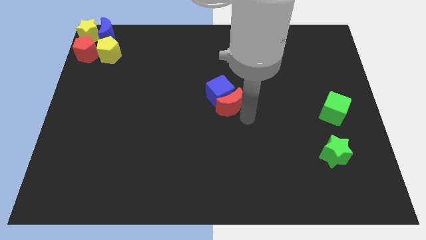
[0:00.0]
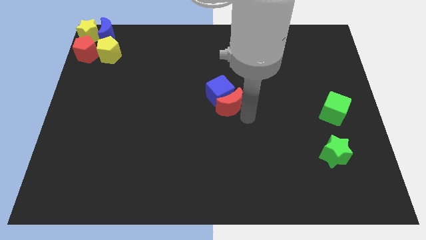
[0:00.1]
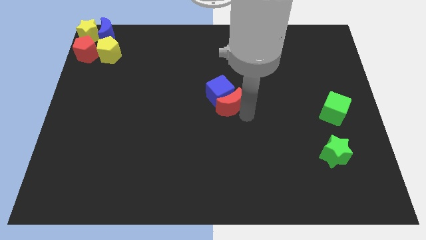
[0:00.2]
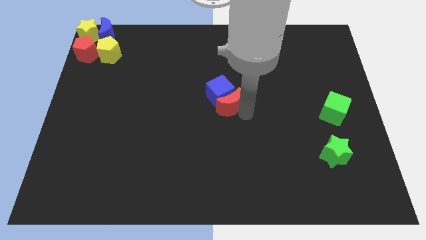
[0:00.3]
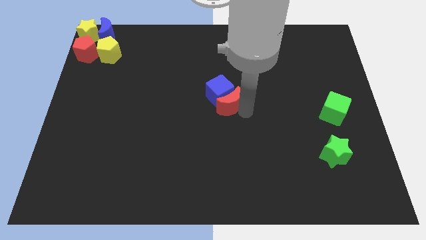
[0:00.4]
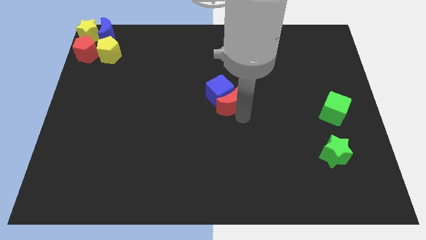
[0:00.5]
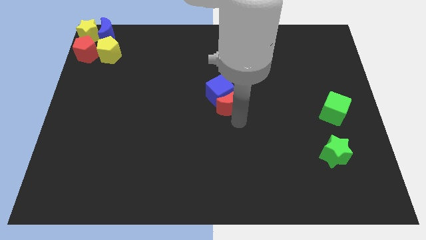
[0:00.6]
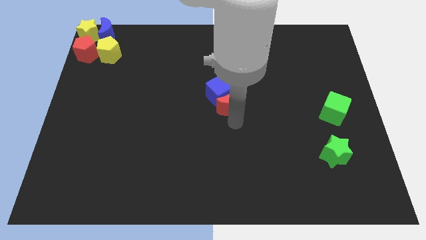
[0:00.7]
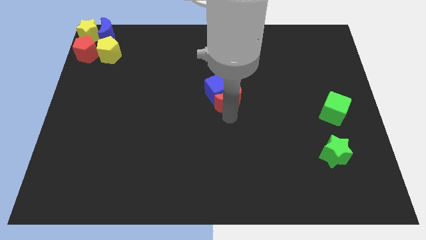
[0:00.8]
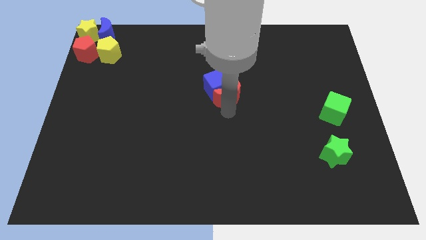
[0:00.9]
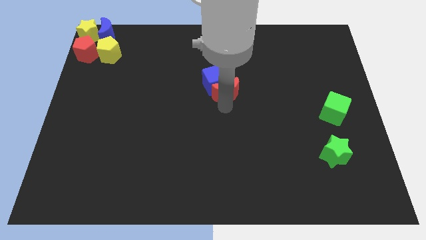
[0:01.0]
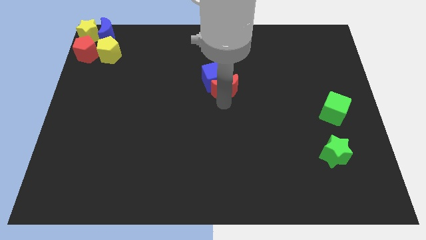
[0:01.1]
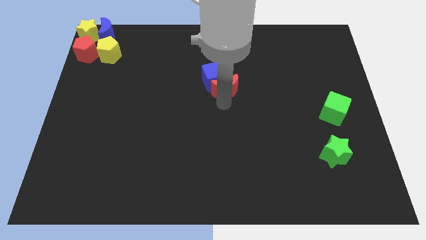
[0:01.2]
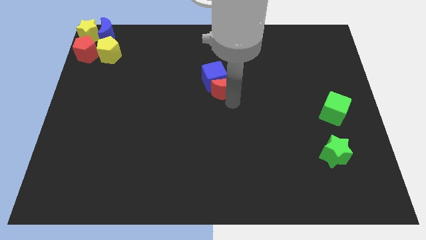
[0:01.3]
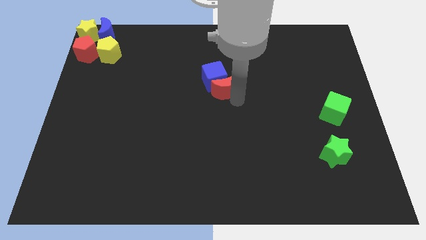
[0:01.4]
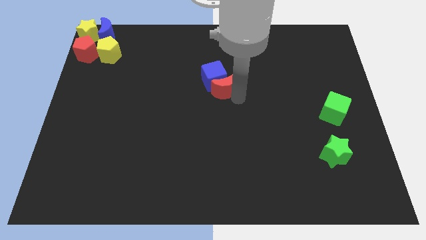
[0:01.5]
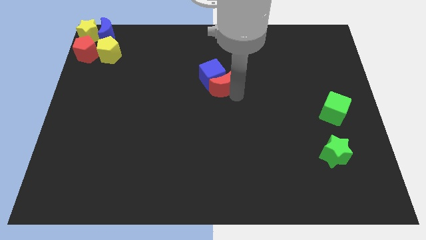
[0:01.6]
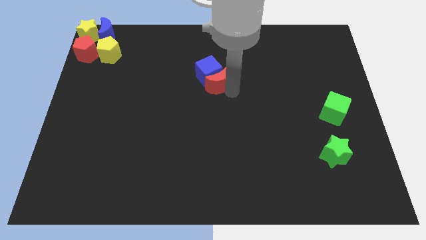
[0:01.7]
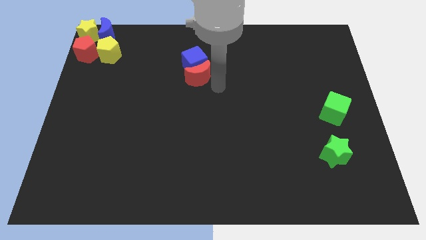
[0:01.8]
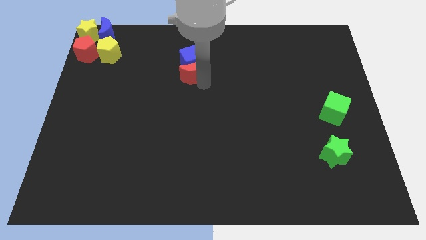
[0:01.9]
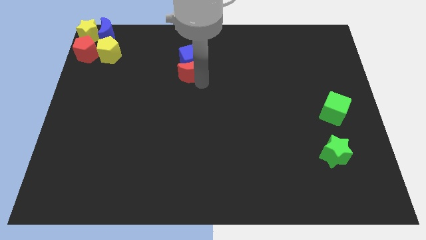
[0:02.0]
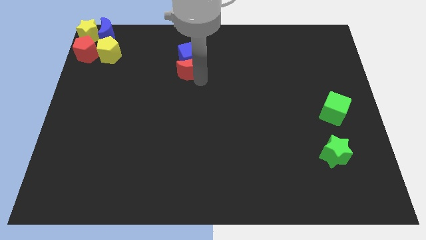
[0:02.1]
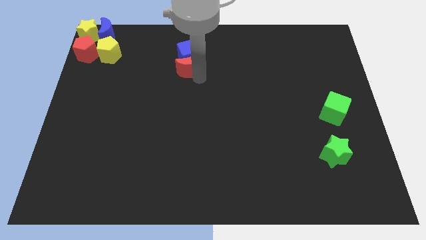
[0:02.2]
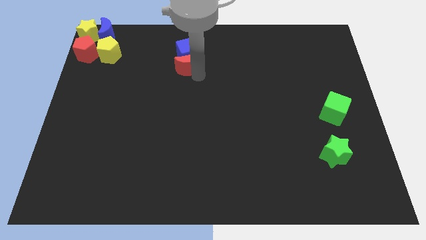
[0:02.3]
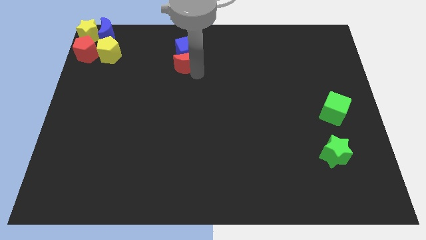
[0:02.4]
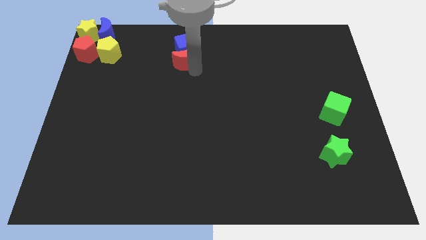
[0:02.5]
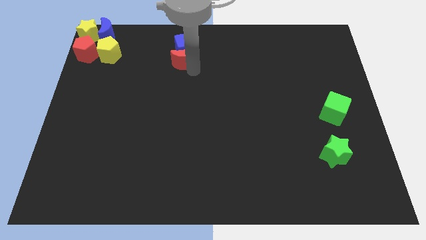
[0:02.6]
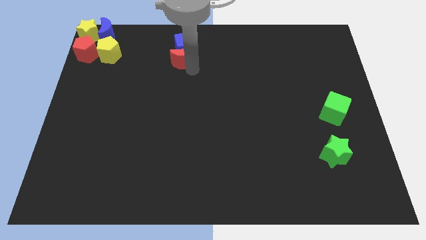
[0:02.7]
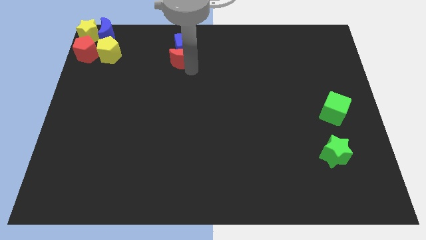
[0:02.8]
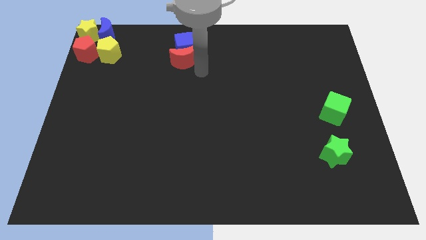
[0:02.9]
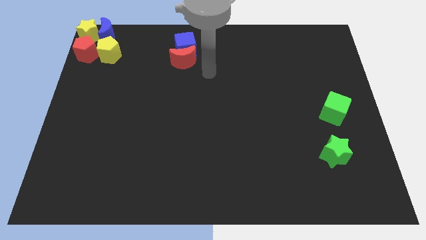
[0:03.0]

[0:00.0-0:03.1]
slide red moon along with blue cube to right of yellow pentagon

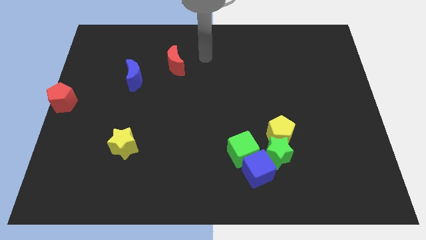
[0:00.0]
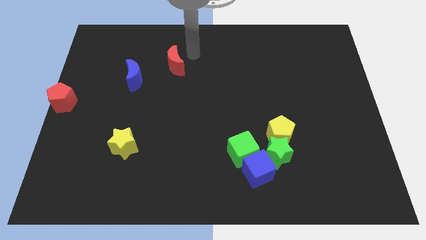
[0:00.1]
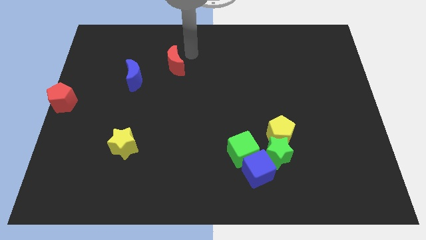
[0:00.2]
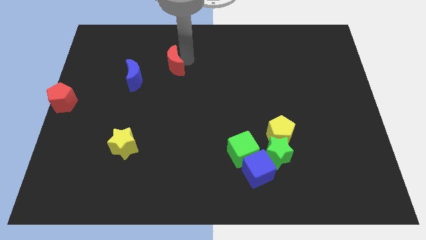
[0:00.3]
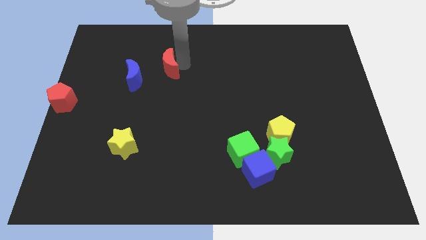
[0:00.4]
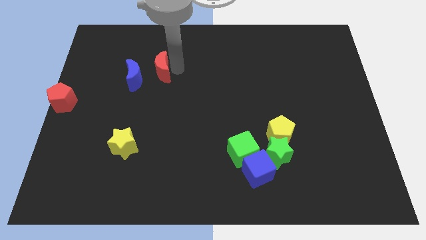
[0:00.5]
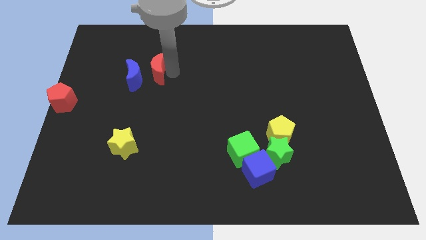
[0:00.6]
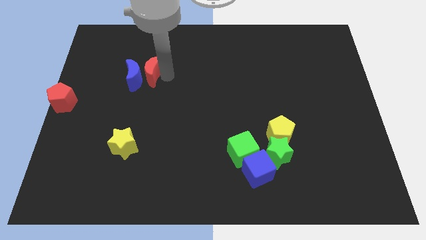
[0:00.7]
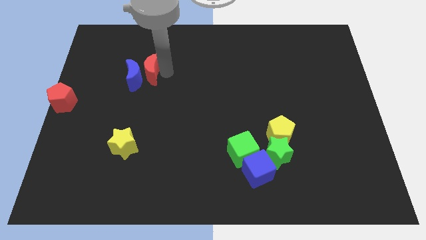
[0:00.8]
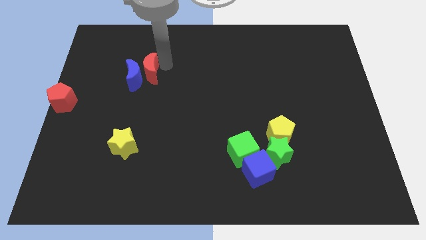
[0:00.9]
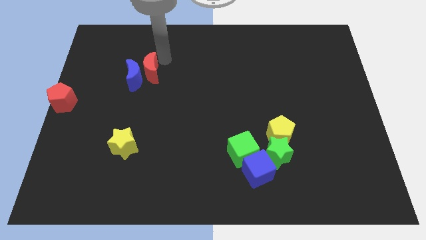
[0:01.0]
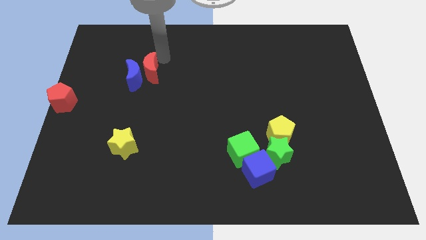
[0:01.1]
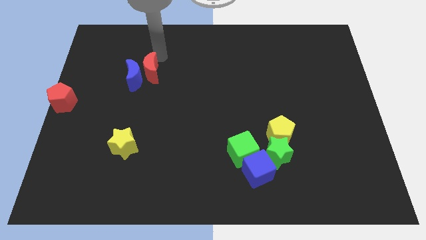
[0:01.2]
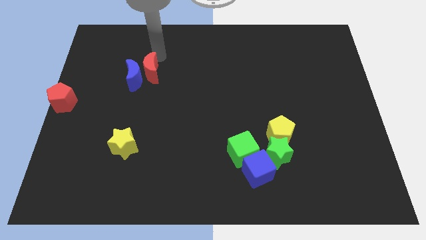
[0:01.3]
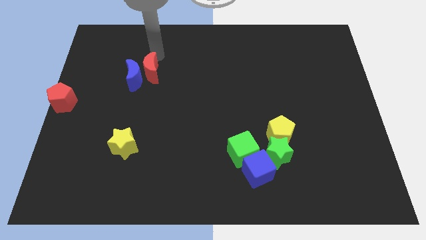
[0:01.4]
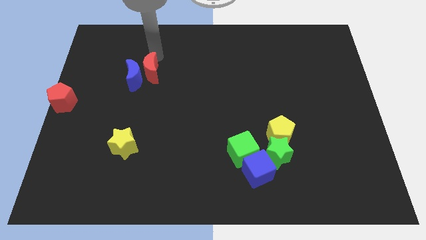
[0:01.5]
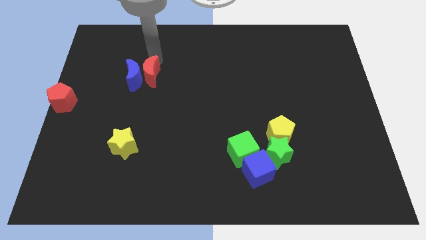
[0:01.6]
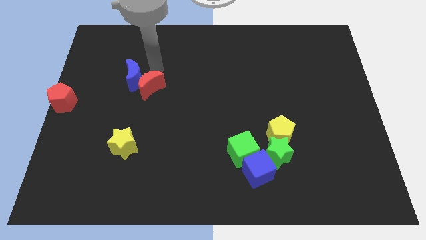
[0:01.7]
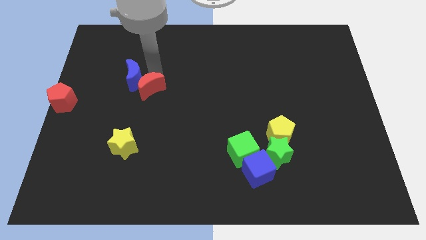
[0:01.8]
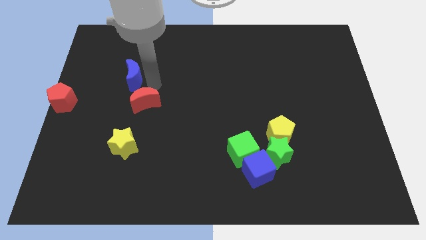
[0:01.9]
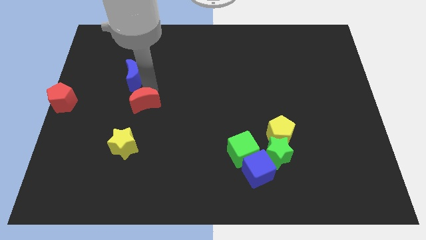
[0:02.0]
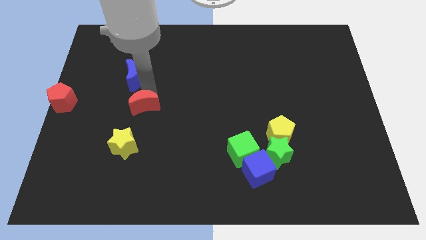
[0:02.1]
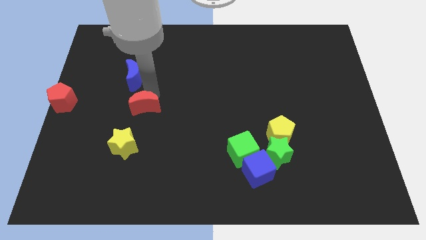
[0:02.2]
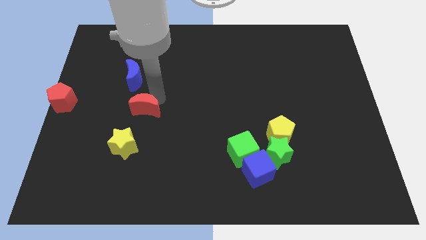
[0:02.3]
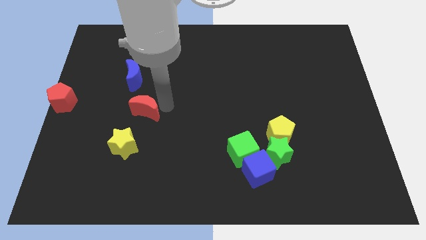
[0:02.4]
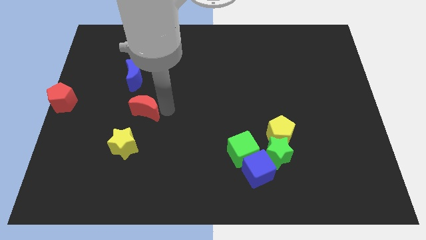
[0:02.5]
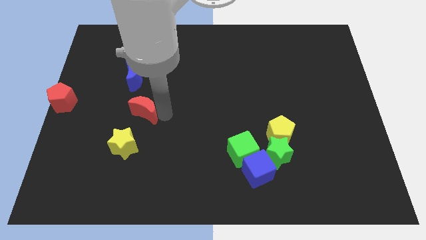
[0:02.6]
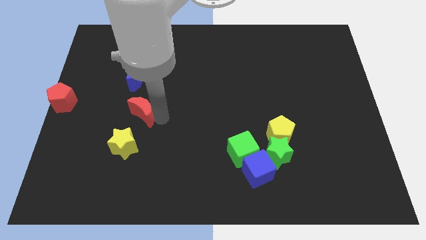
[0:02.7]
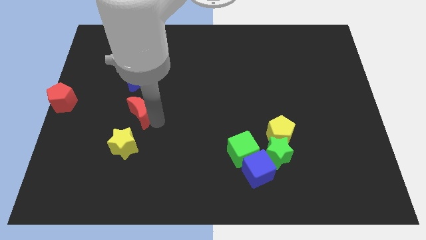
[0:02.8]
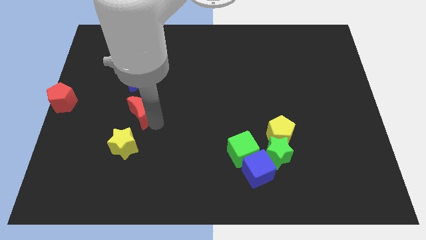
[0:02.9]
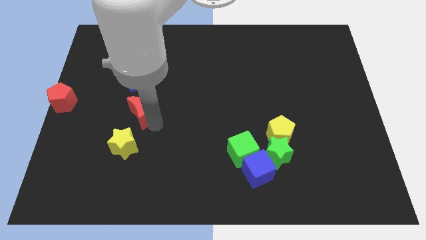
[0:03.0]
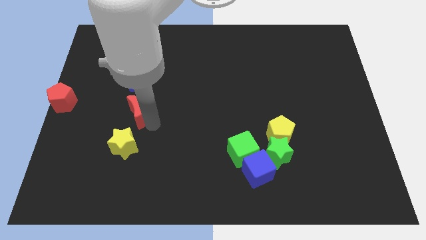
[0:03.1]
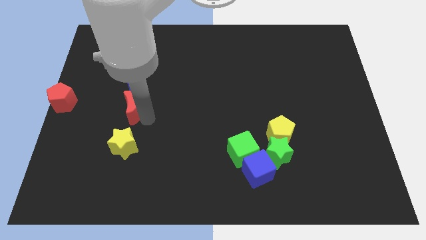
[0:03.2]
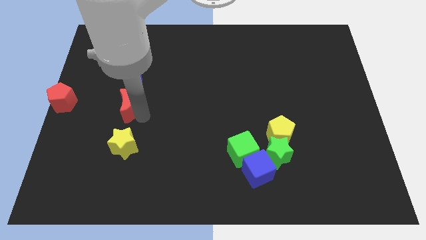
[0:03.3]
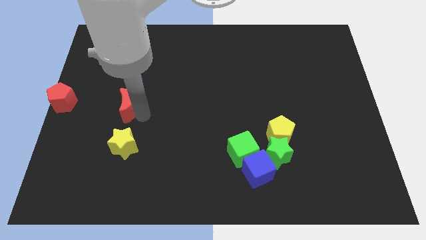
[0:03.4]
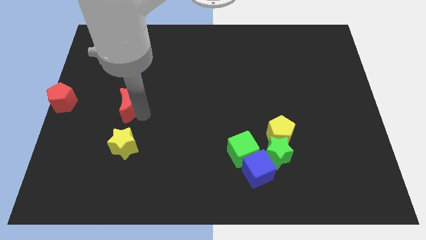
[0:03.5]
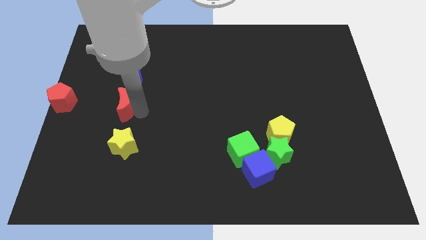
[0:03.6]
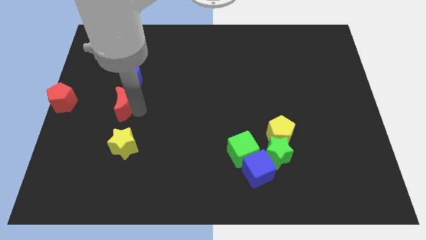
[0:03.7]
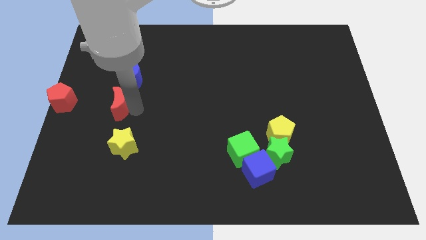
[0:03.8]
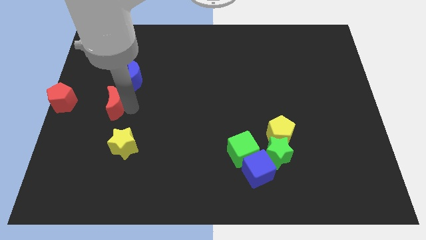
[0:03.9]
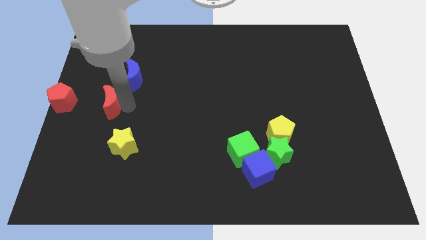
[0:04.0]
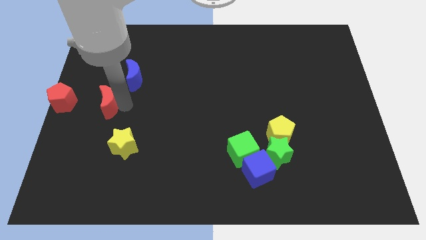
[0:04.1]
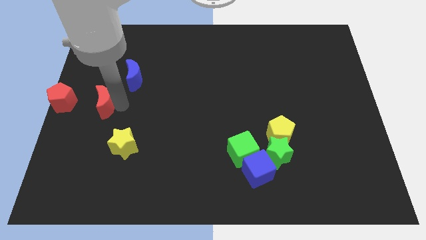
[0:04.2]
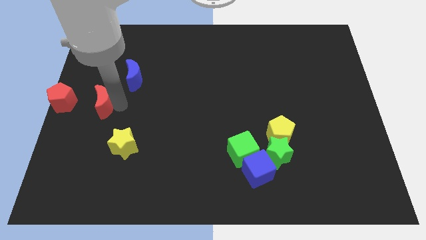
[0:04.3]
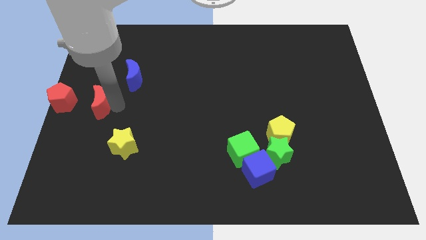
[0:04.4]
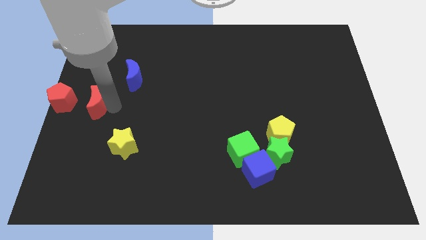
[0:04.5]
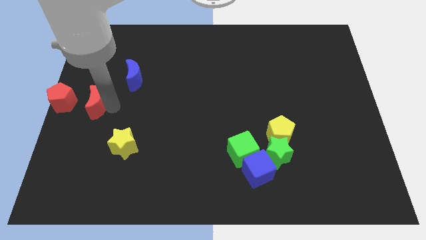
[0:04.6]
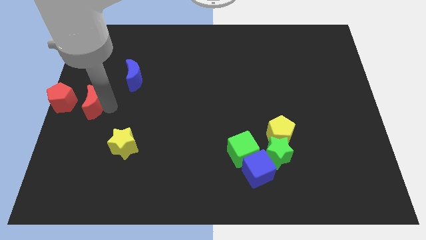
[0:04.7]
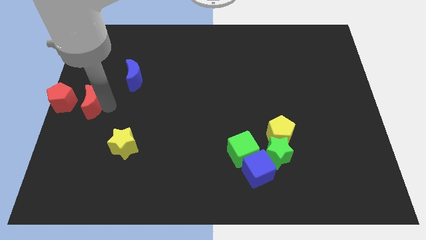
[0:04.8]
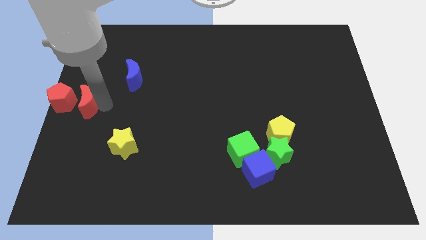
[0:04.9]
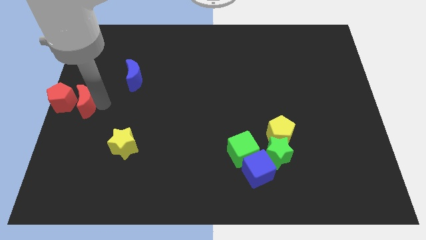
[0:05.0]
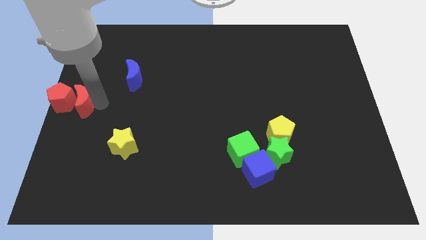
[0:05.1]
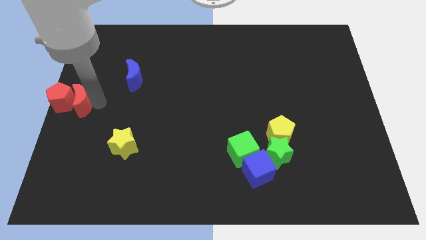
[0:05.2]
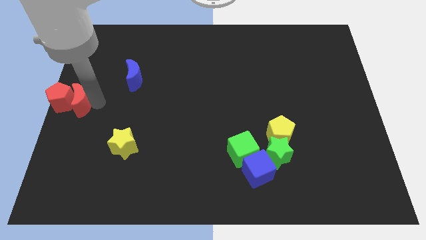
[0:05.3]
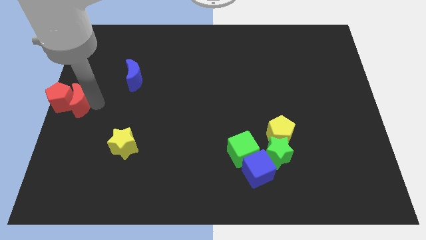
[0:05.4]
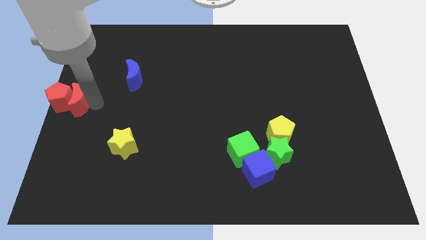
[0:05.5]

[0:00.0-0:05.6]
move the red moon into the right side of the red pentagon

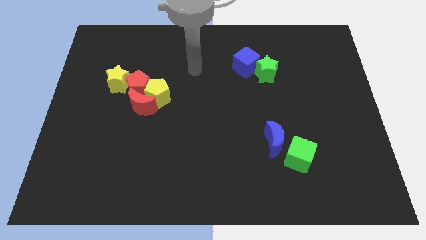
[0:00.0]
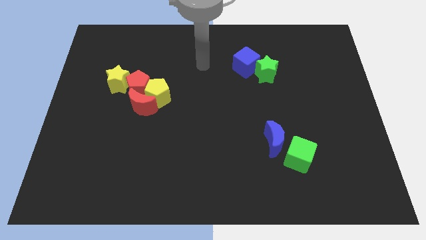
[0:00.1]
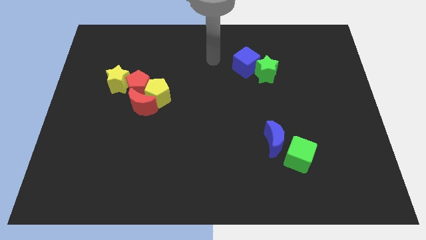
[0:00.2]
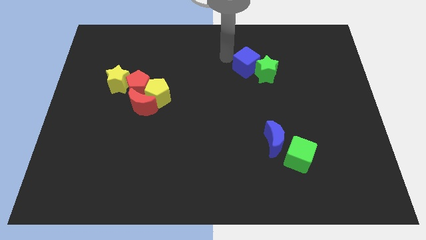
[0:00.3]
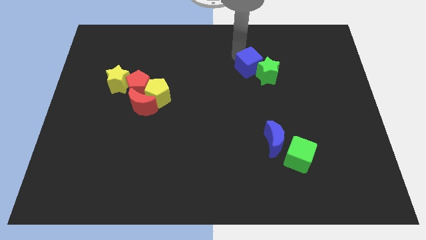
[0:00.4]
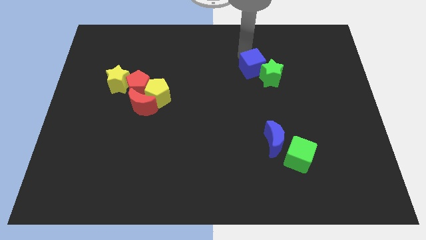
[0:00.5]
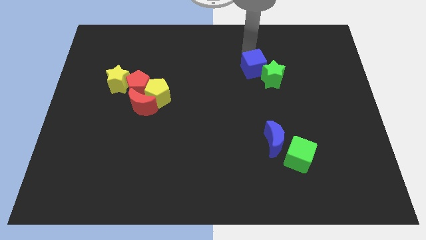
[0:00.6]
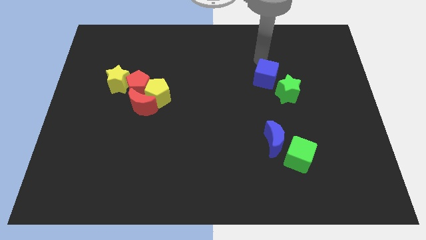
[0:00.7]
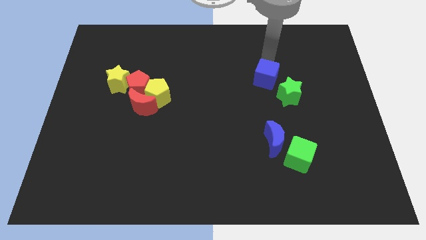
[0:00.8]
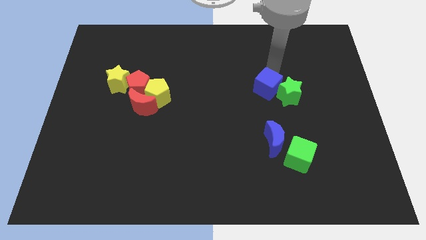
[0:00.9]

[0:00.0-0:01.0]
push the green star and the blue cube slightly to the bottom right
